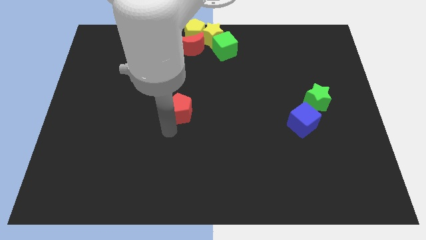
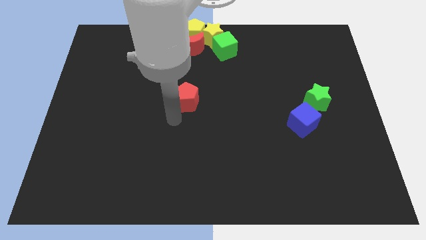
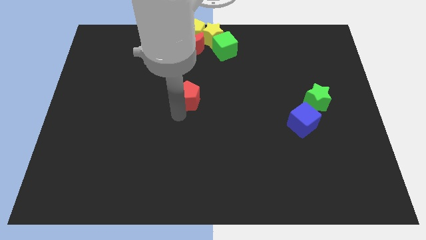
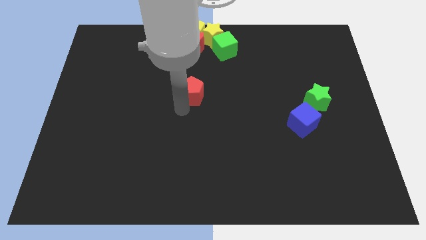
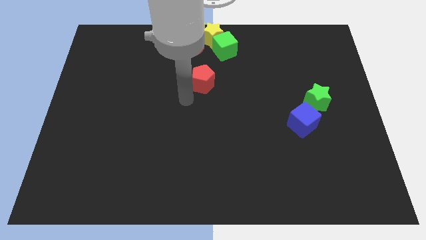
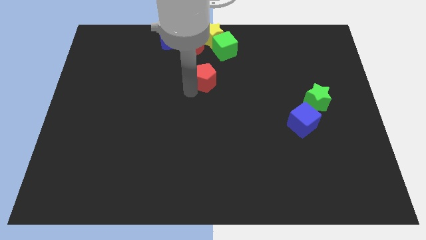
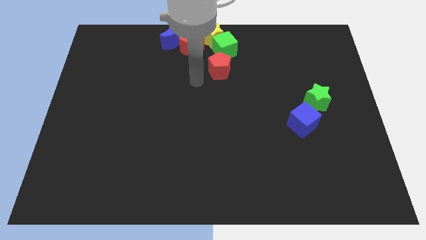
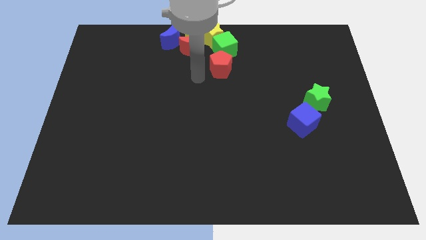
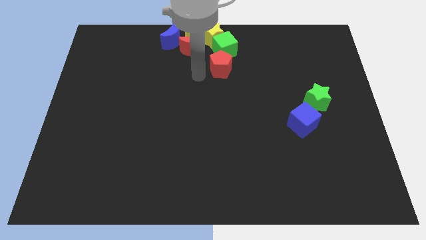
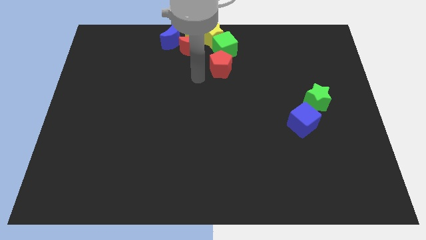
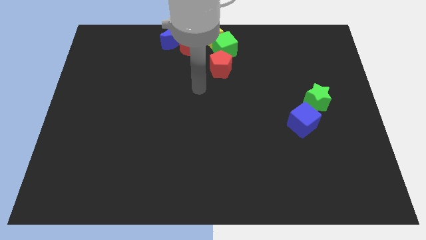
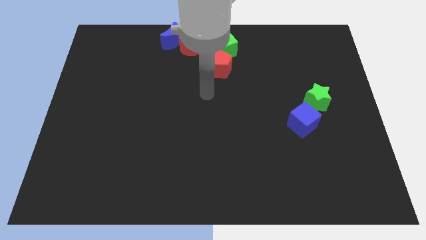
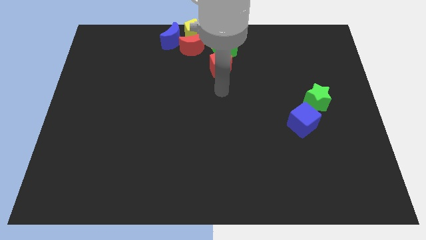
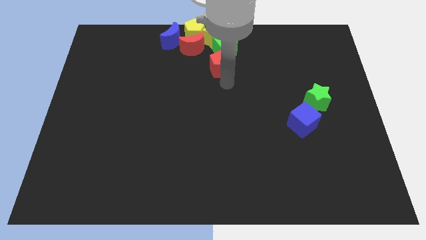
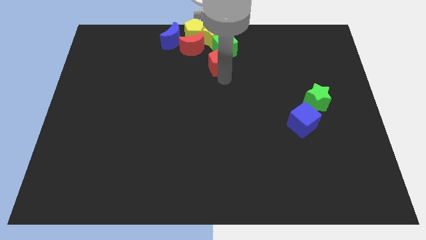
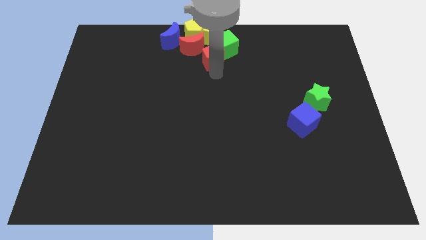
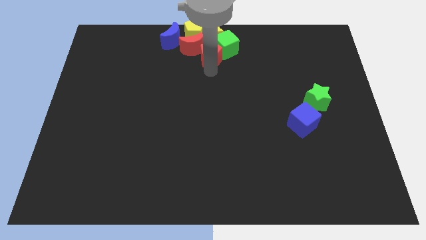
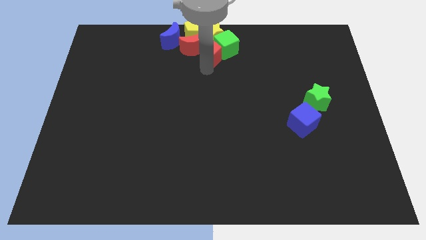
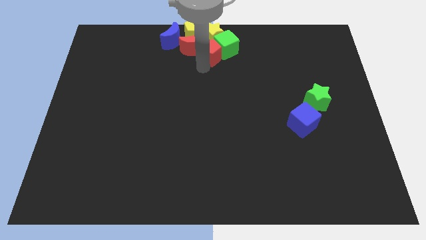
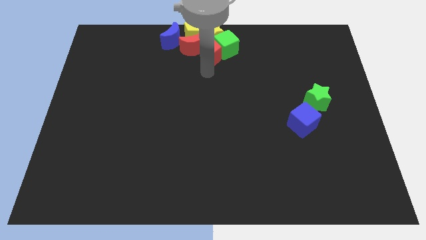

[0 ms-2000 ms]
push red pentagon into group of blocks

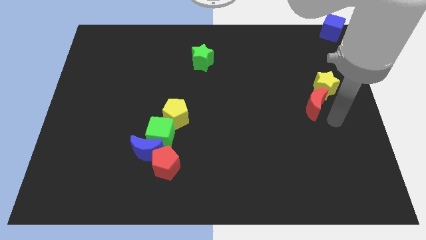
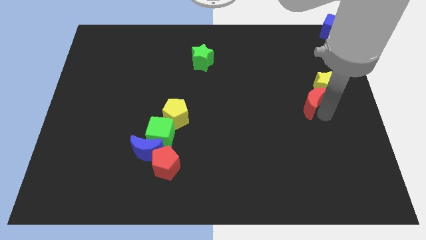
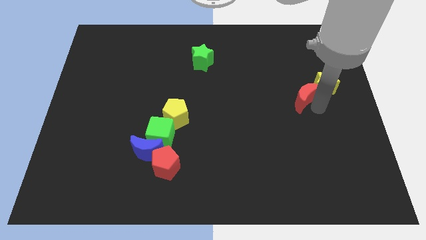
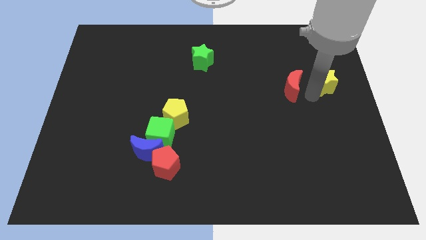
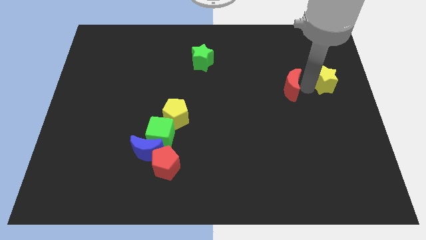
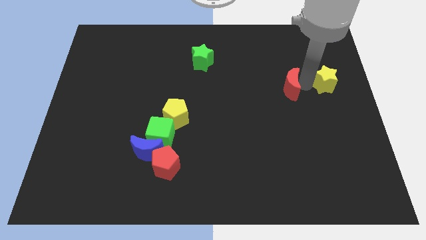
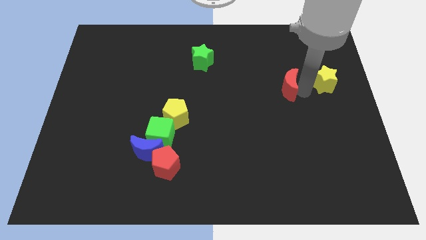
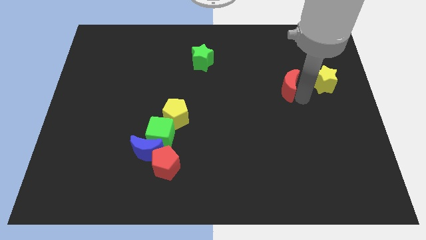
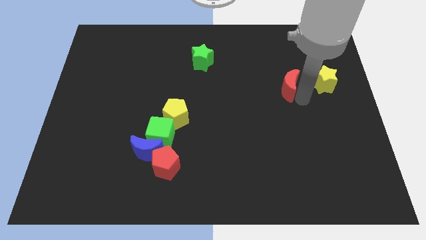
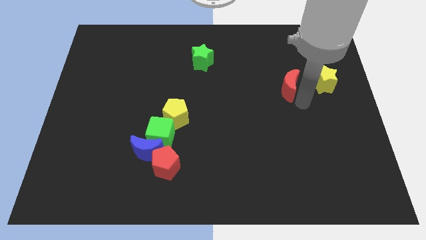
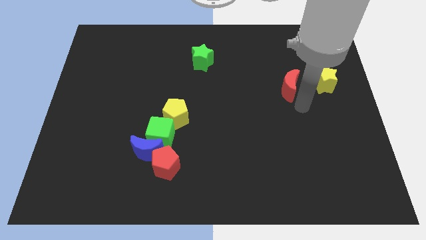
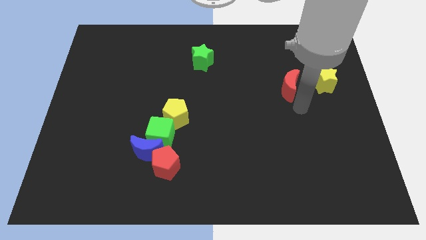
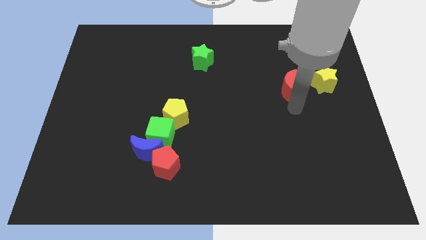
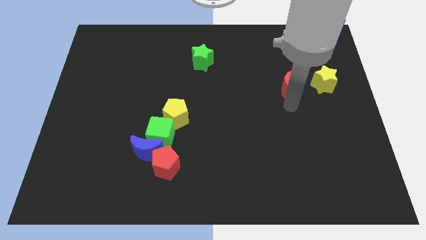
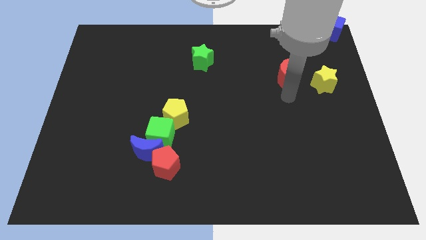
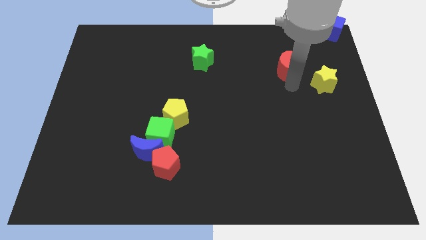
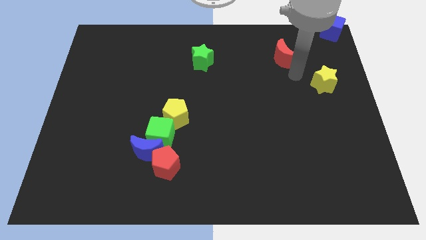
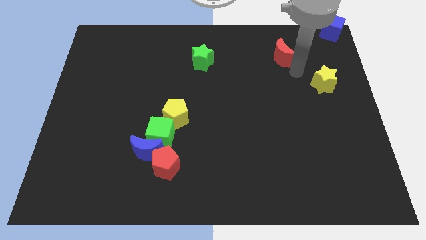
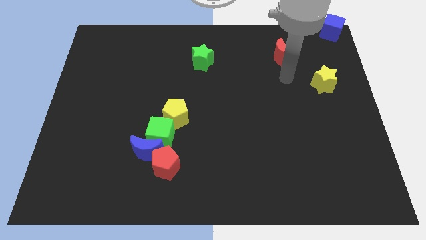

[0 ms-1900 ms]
move the red crescent parallel to the green star

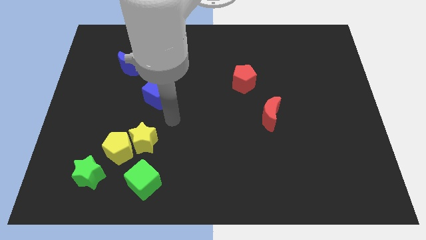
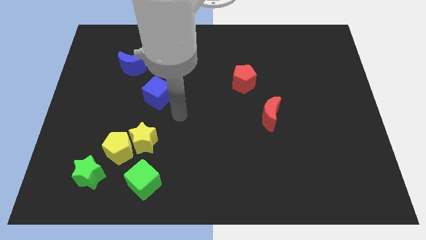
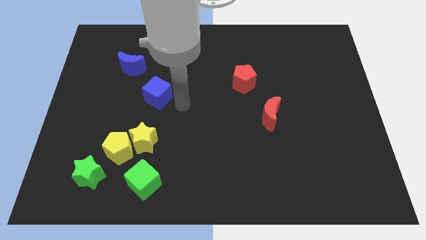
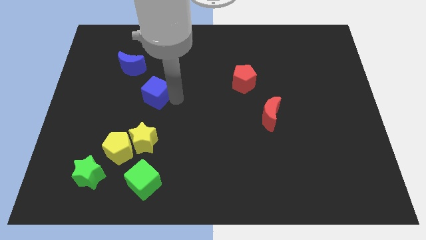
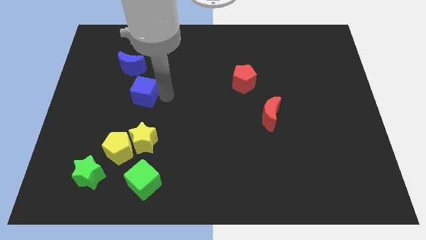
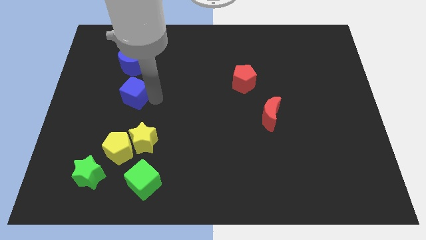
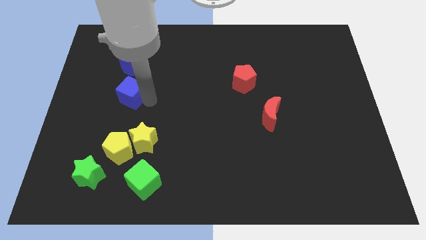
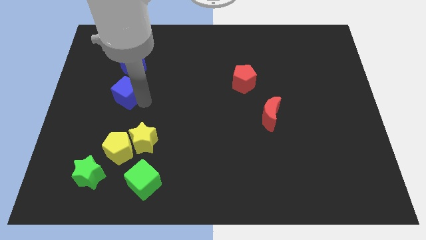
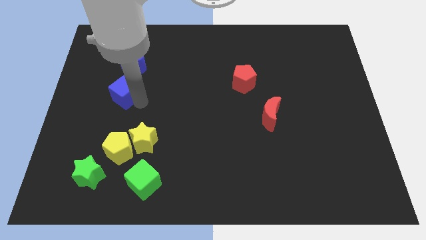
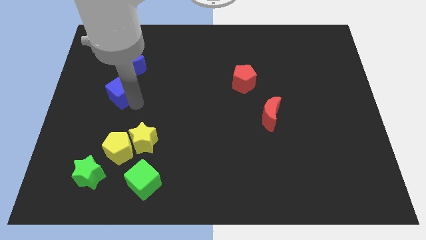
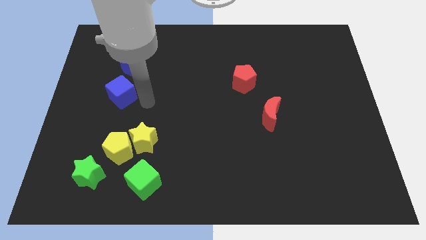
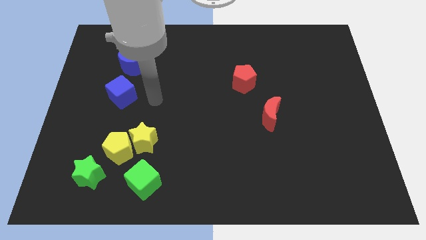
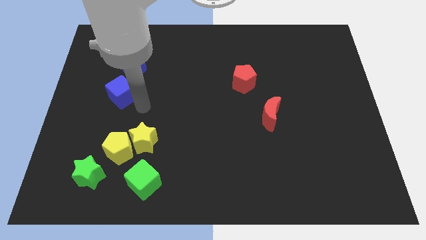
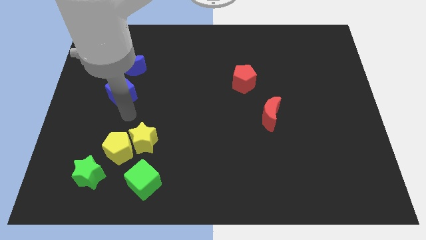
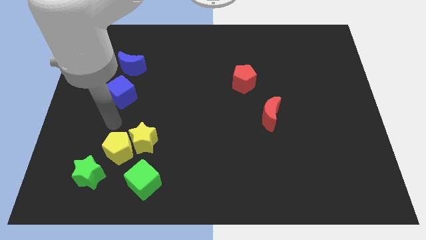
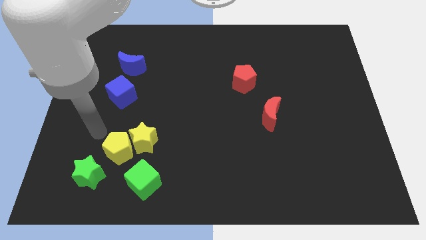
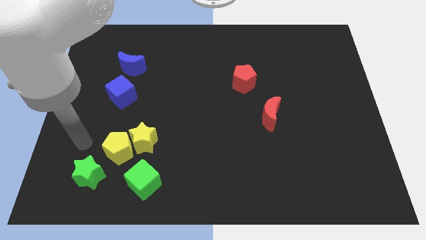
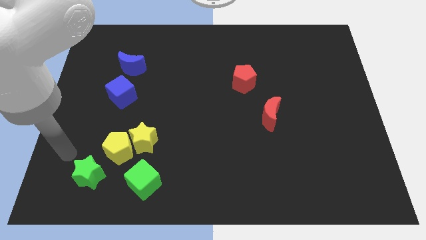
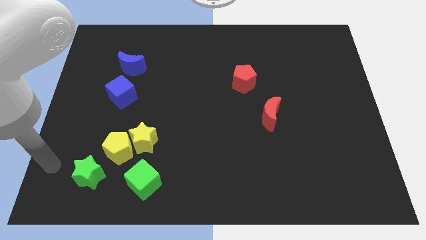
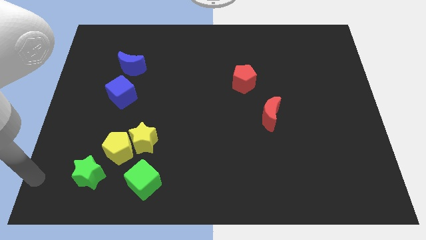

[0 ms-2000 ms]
move the blue cube slightly to the left side of the board

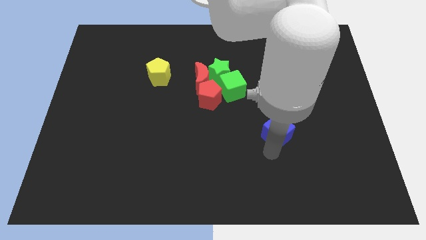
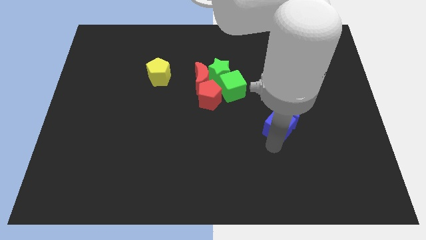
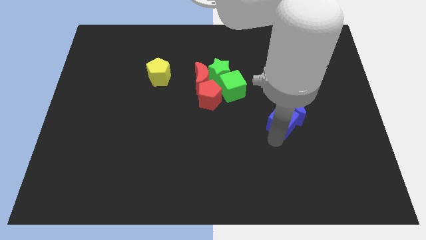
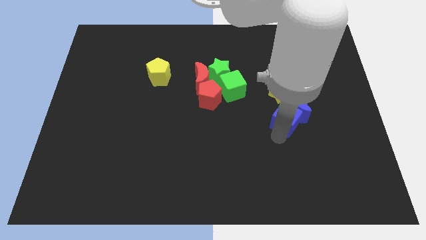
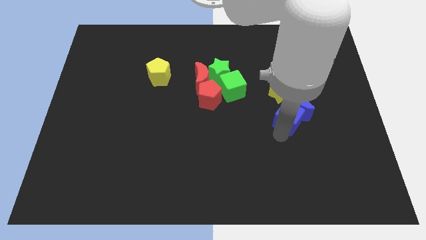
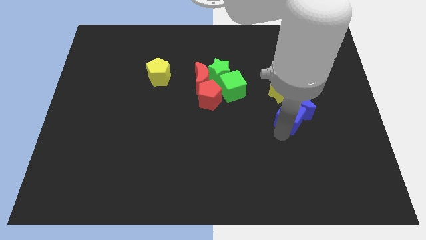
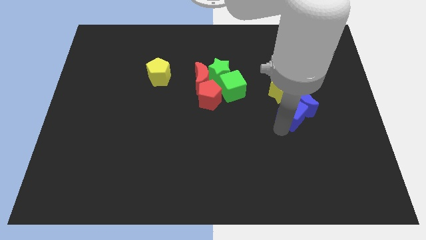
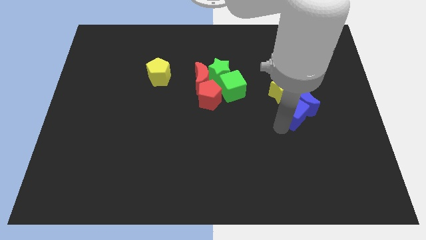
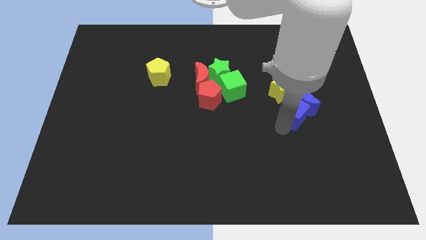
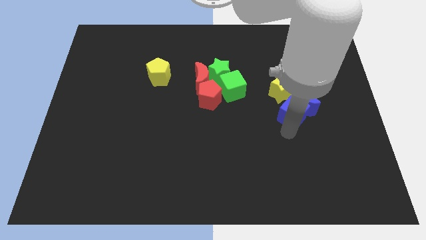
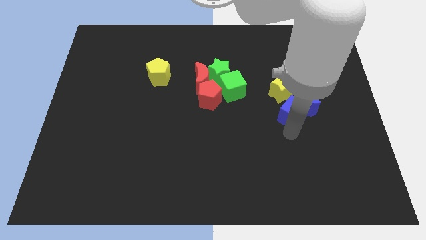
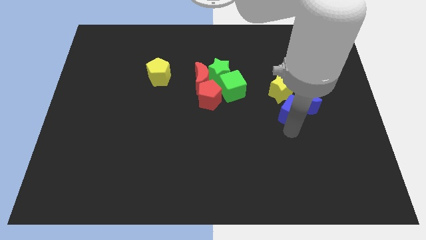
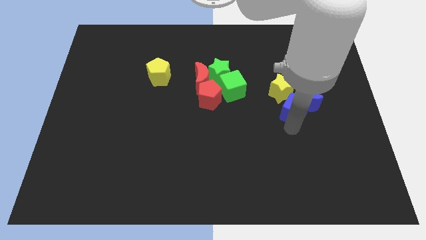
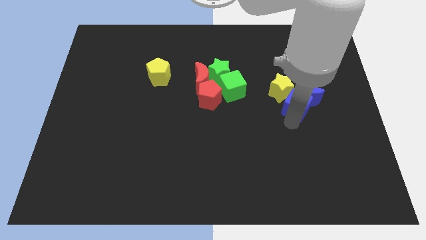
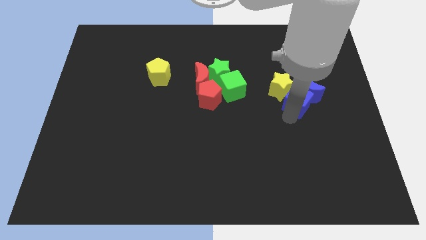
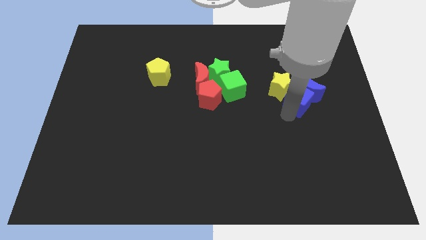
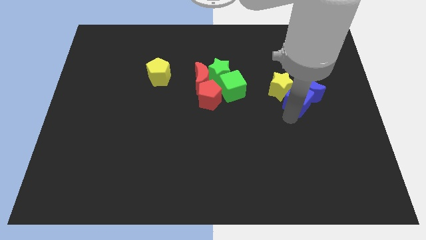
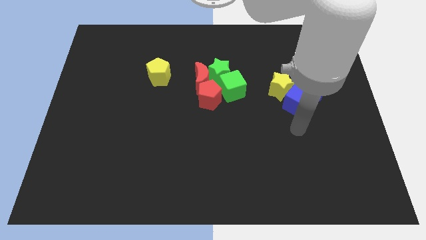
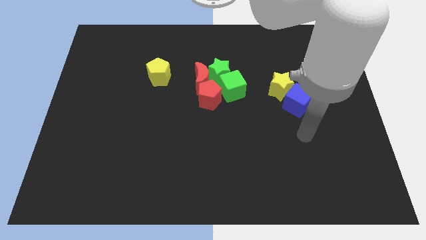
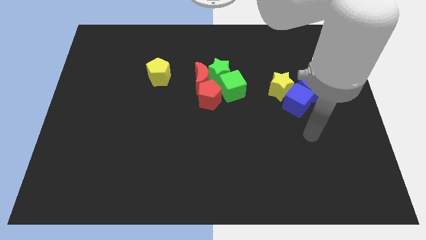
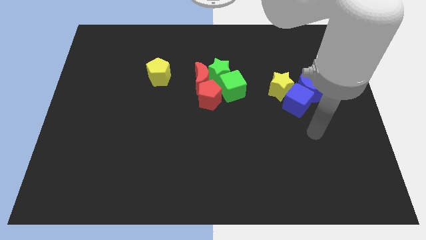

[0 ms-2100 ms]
push the blue blocks towards yellow star

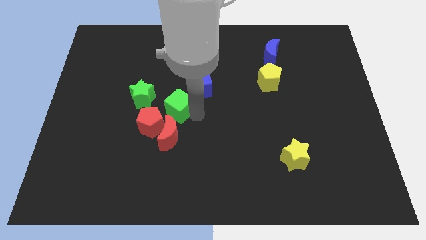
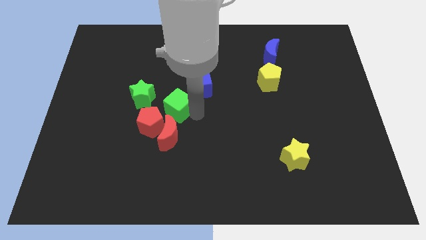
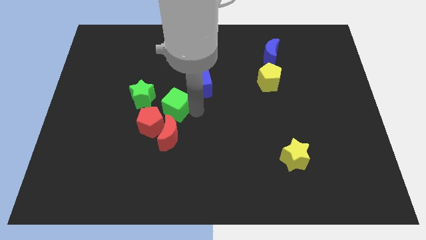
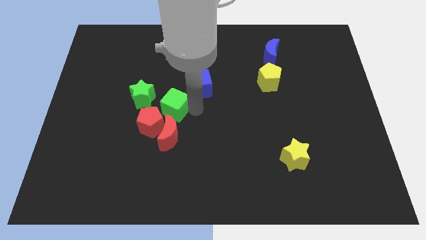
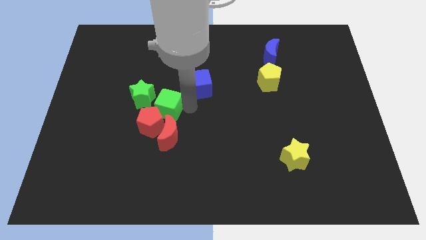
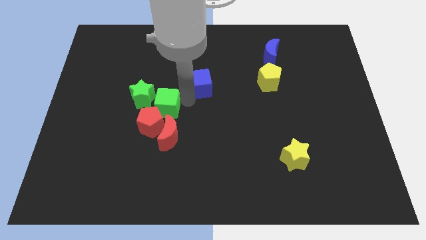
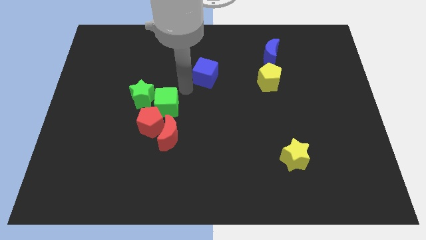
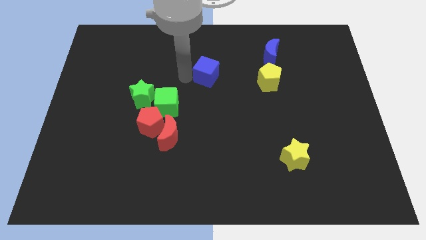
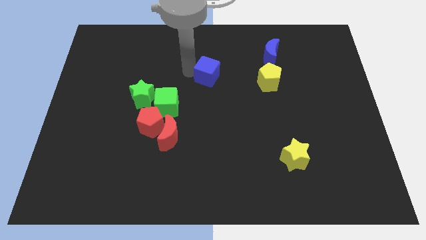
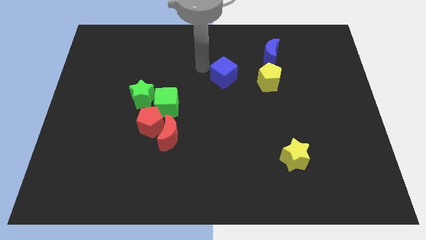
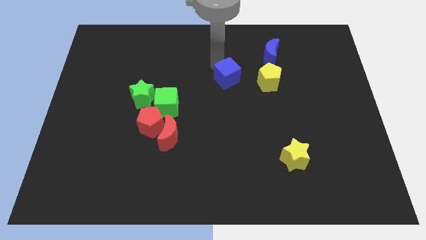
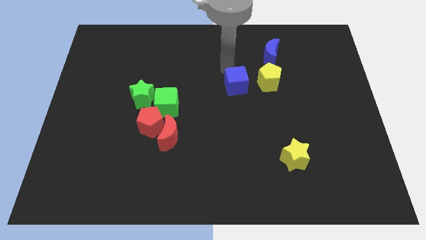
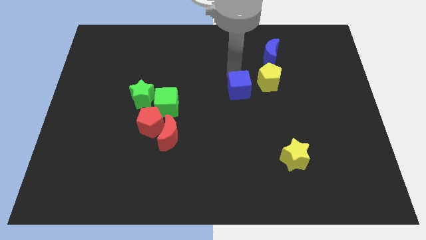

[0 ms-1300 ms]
place blue cube beside yellow pentagon
